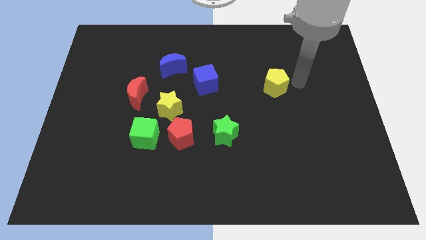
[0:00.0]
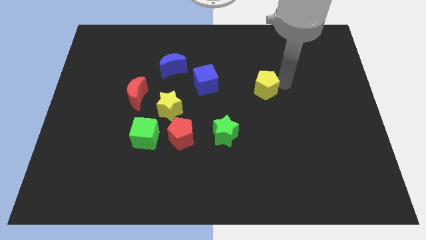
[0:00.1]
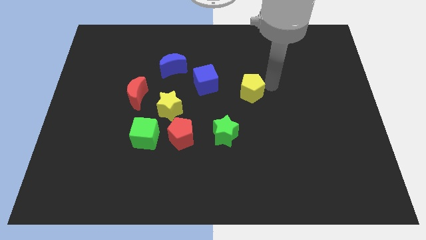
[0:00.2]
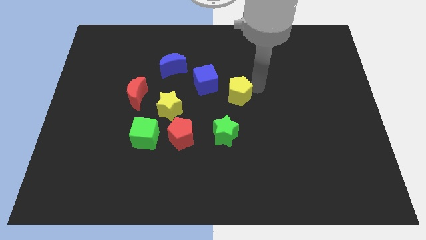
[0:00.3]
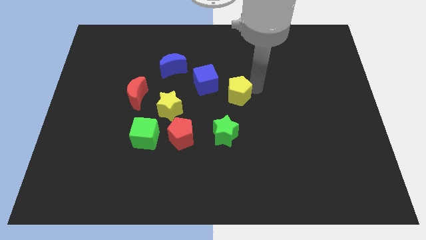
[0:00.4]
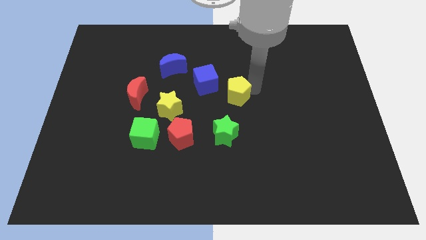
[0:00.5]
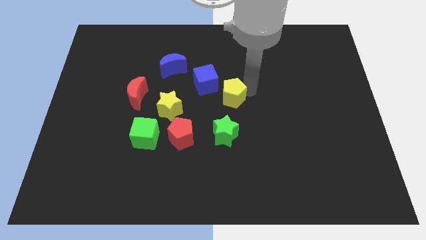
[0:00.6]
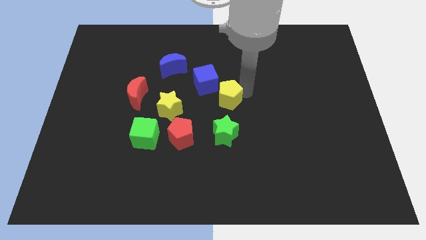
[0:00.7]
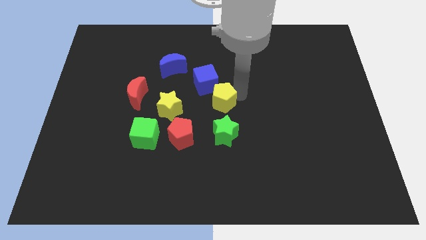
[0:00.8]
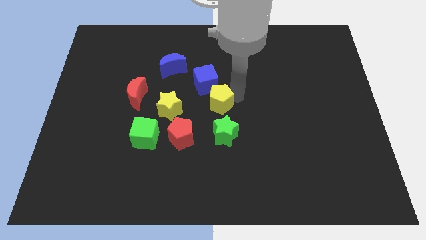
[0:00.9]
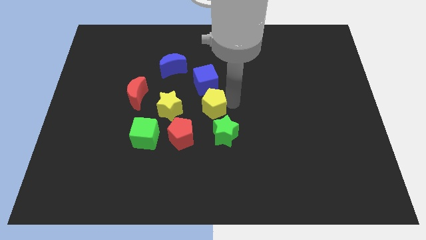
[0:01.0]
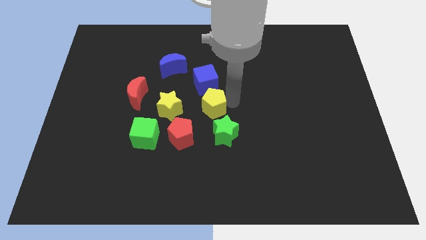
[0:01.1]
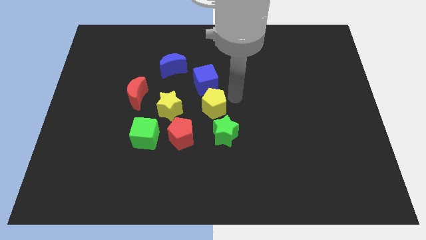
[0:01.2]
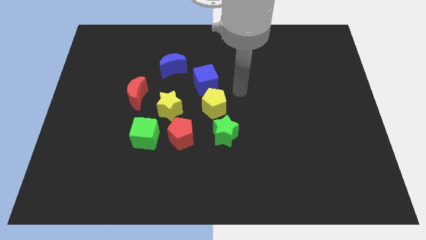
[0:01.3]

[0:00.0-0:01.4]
push the yellow pentagon to the top of the green star

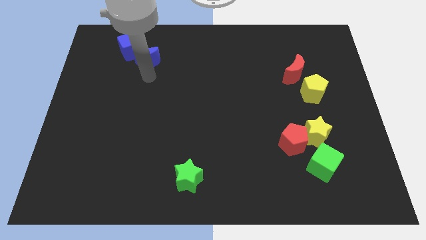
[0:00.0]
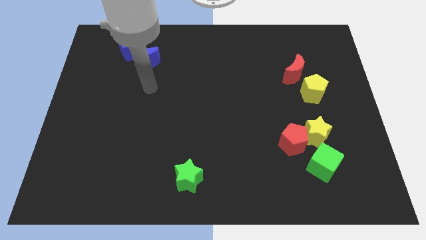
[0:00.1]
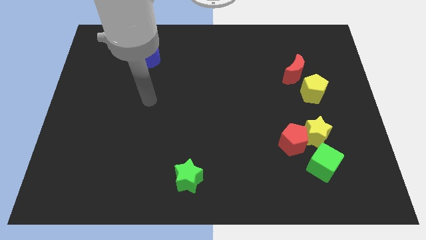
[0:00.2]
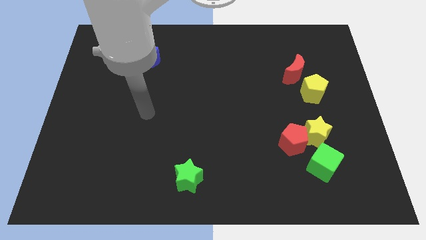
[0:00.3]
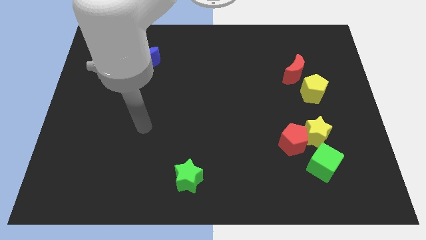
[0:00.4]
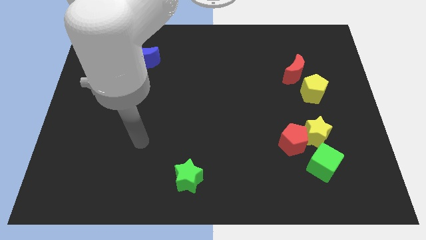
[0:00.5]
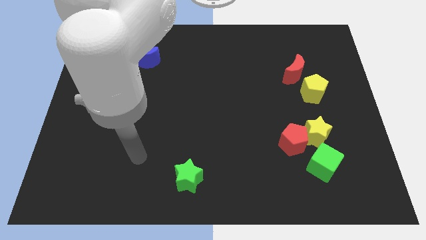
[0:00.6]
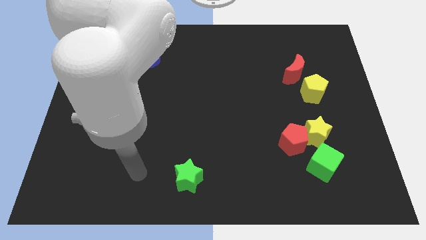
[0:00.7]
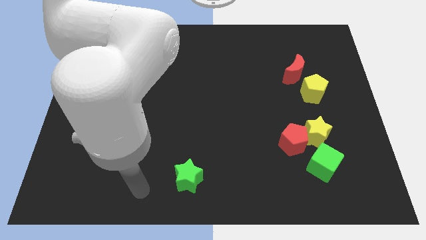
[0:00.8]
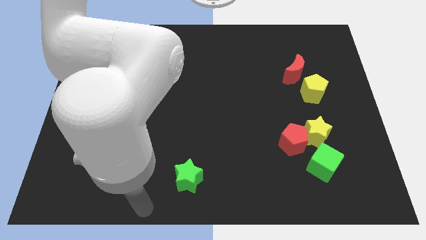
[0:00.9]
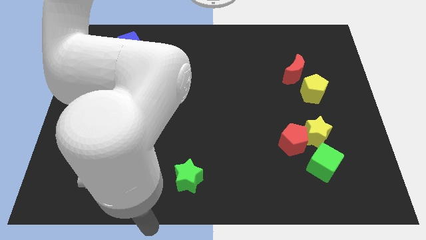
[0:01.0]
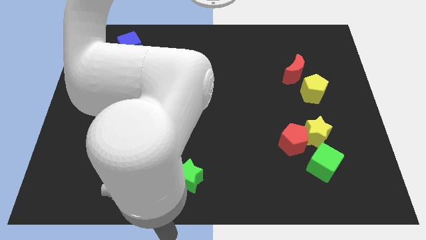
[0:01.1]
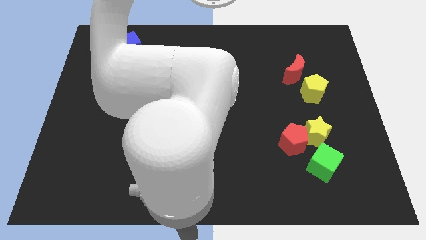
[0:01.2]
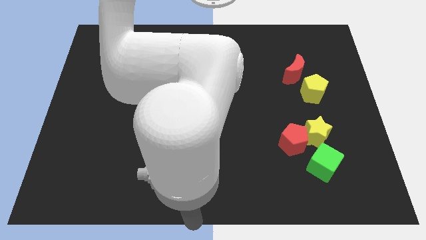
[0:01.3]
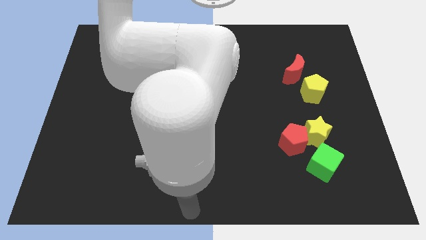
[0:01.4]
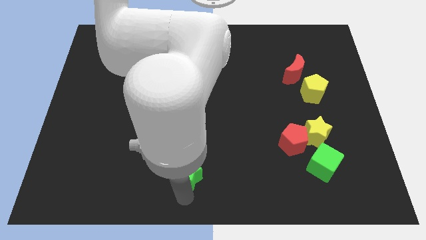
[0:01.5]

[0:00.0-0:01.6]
touch the bottom side of the green star

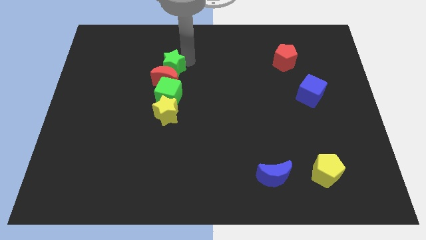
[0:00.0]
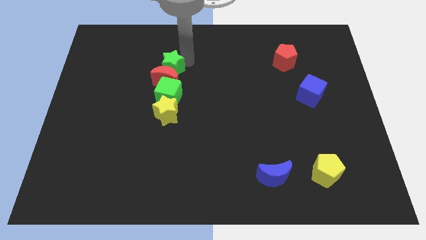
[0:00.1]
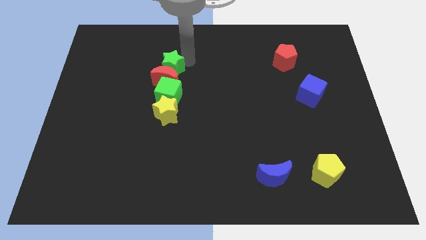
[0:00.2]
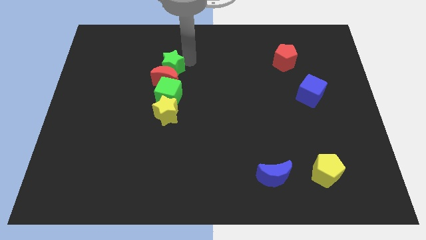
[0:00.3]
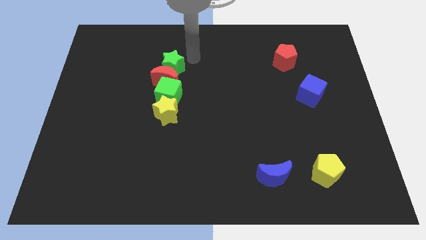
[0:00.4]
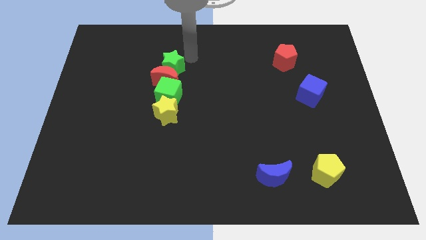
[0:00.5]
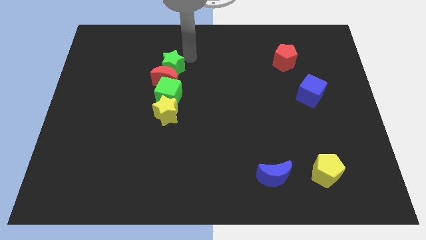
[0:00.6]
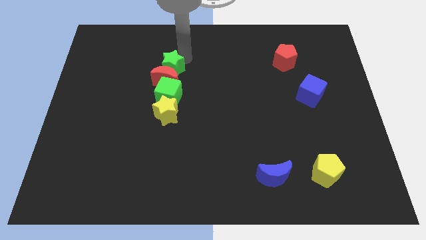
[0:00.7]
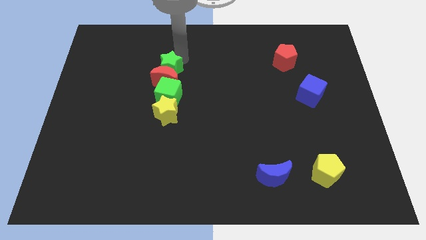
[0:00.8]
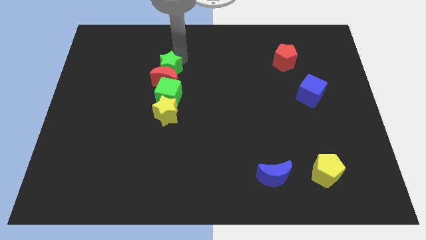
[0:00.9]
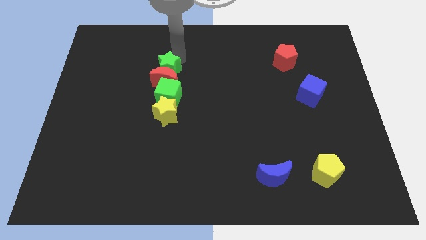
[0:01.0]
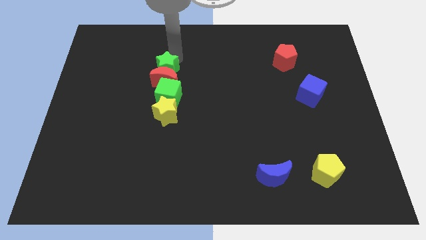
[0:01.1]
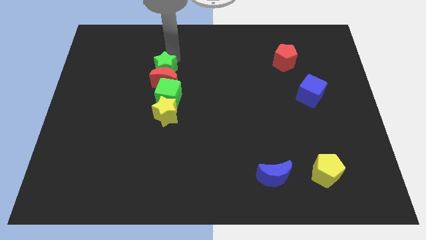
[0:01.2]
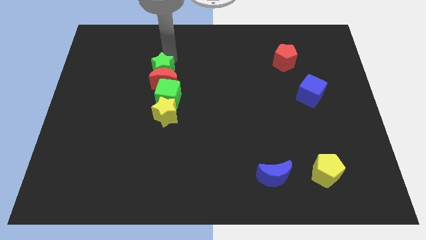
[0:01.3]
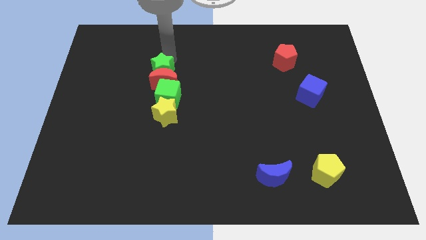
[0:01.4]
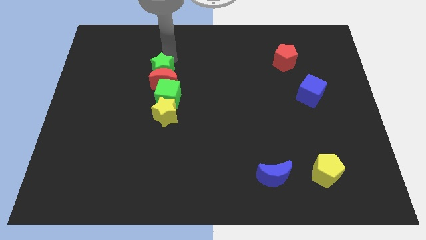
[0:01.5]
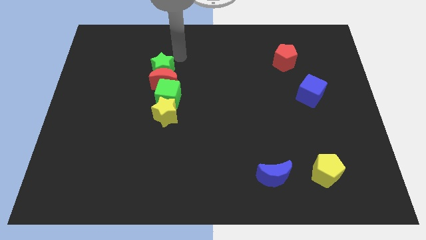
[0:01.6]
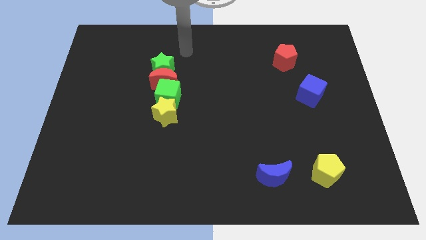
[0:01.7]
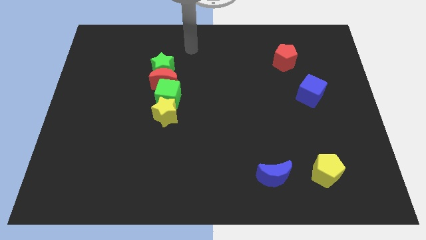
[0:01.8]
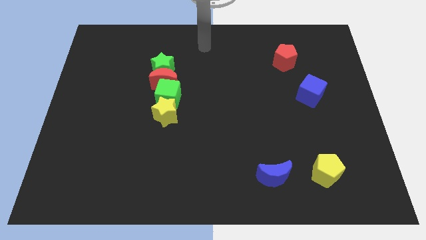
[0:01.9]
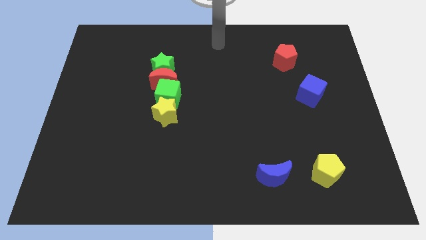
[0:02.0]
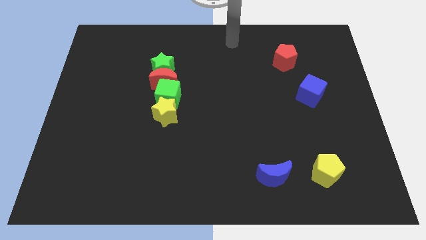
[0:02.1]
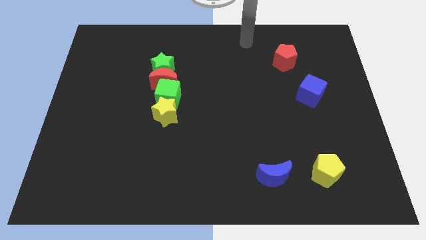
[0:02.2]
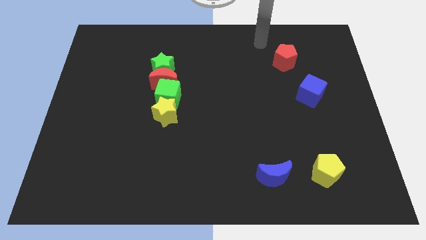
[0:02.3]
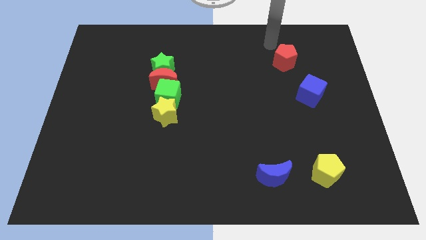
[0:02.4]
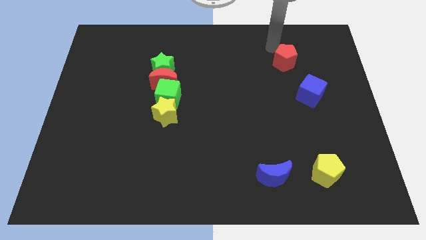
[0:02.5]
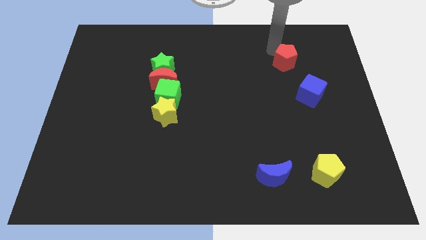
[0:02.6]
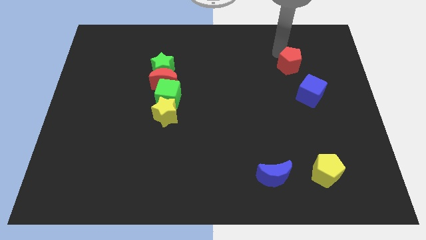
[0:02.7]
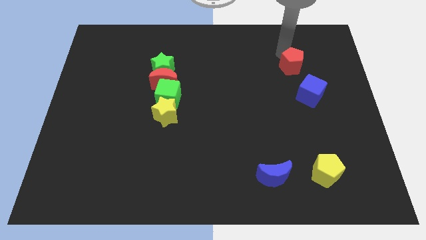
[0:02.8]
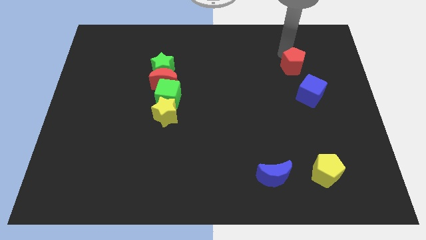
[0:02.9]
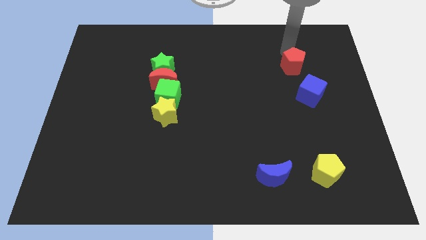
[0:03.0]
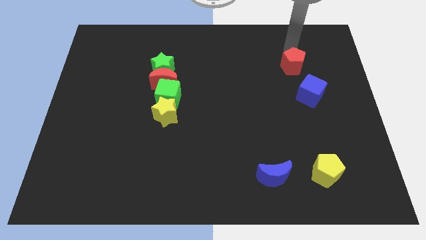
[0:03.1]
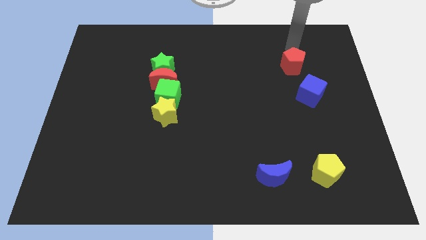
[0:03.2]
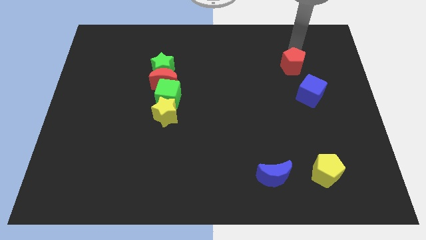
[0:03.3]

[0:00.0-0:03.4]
tap the top side of the red pentagon

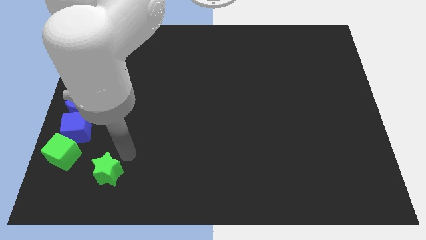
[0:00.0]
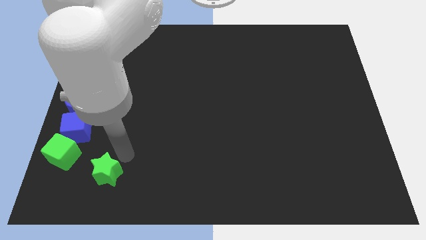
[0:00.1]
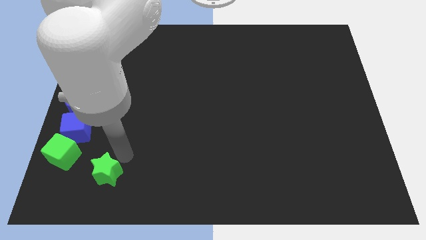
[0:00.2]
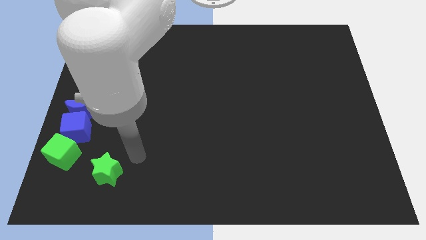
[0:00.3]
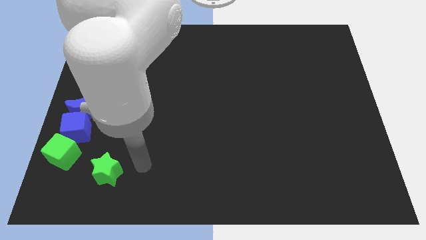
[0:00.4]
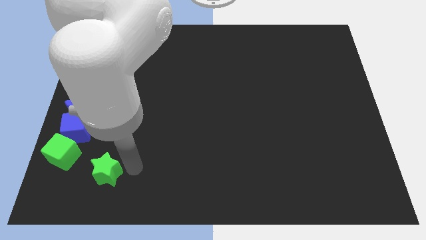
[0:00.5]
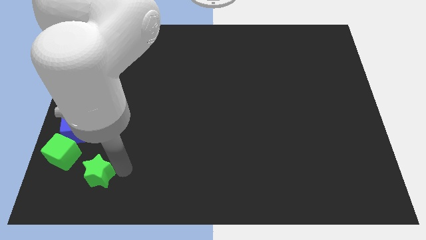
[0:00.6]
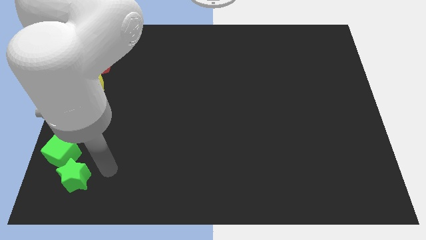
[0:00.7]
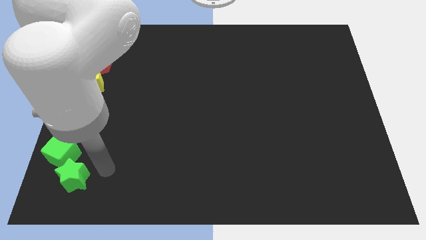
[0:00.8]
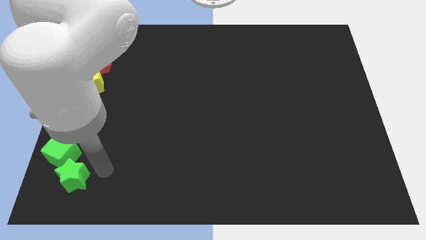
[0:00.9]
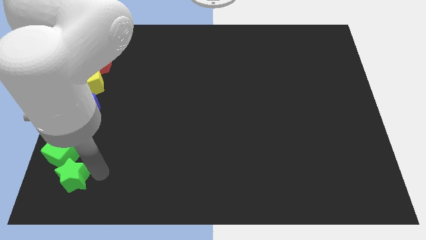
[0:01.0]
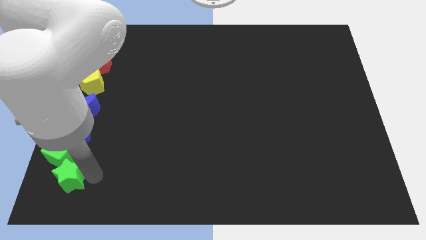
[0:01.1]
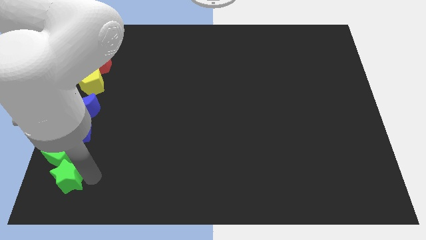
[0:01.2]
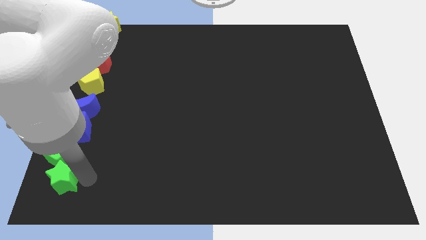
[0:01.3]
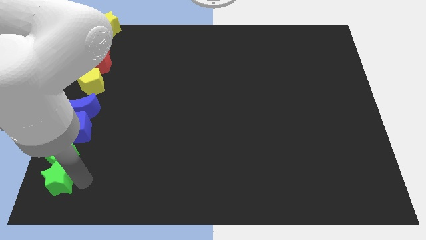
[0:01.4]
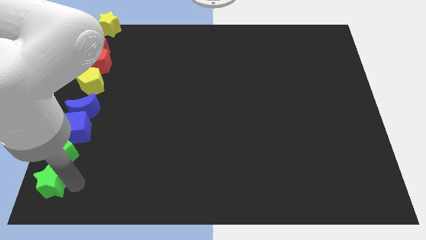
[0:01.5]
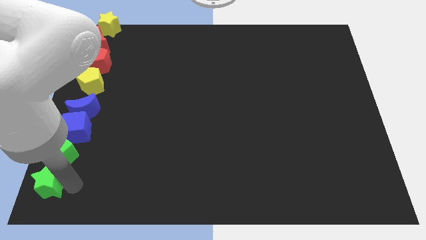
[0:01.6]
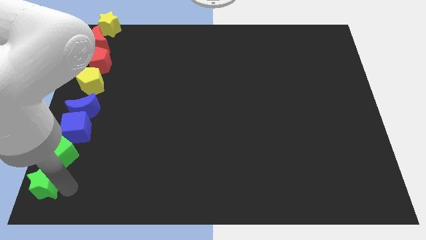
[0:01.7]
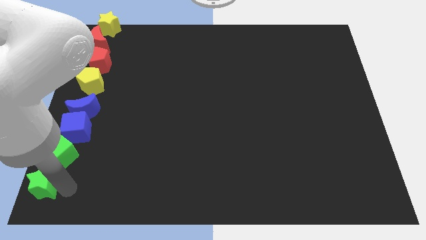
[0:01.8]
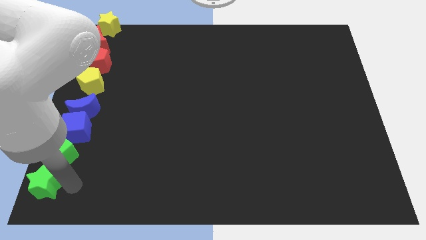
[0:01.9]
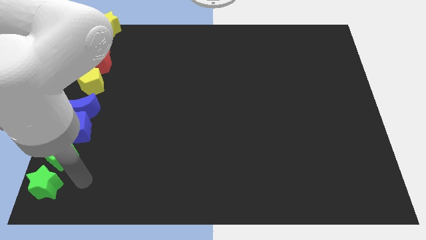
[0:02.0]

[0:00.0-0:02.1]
place green star below green cube

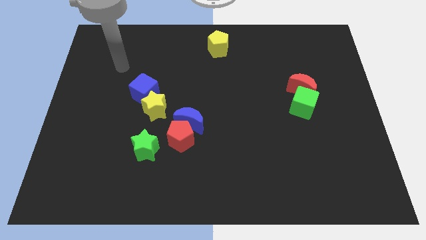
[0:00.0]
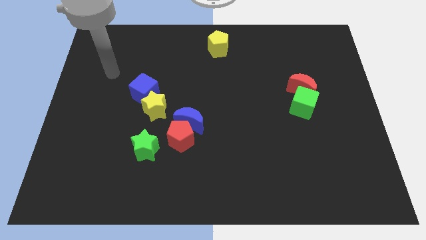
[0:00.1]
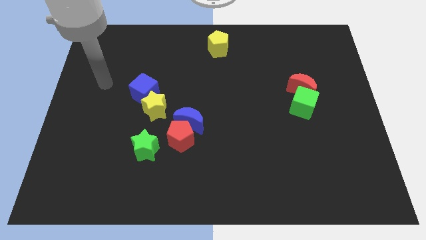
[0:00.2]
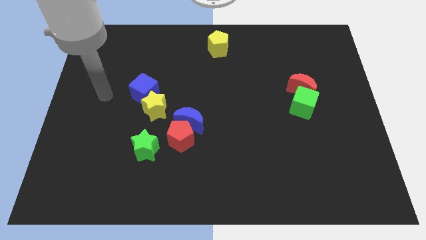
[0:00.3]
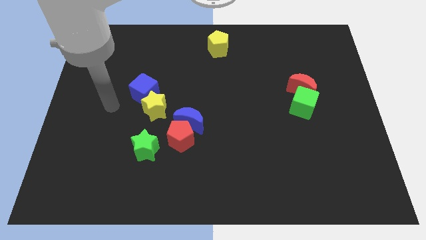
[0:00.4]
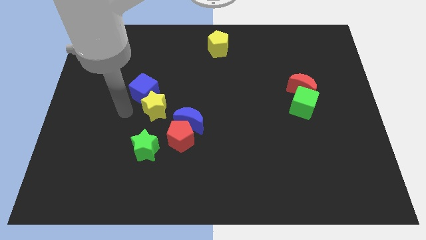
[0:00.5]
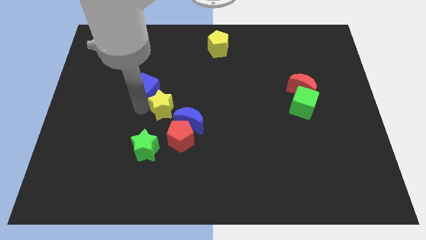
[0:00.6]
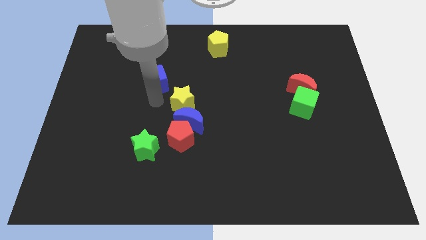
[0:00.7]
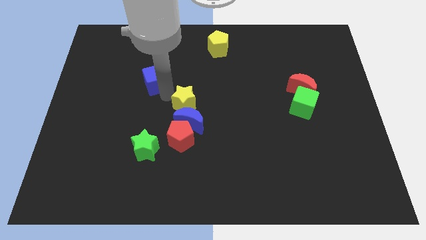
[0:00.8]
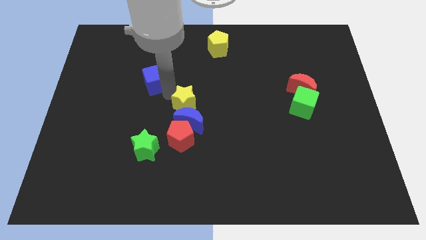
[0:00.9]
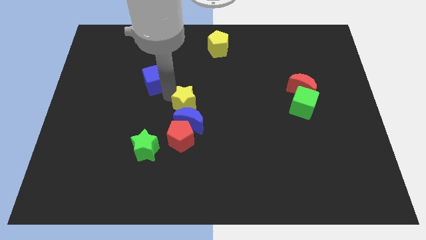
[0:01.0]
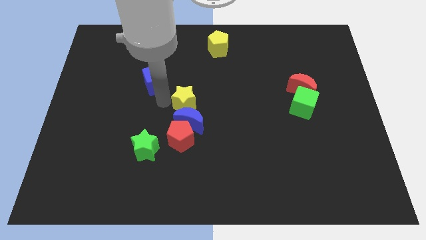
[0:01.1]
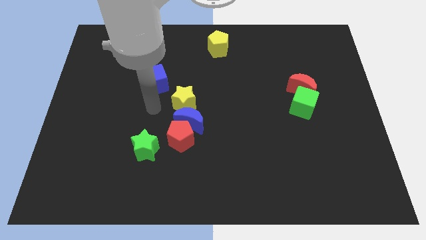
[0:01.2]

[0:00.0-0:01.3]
separate blue cube from yellow star
